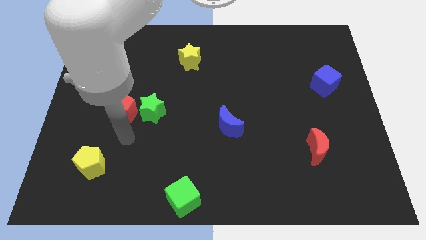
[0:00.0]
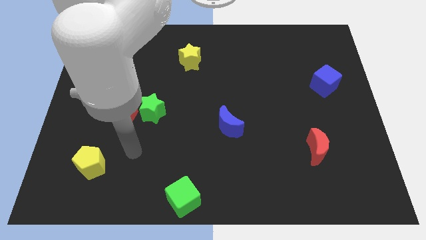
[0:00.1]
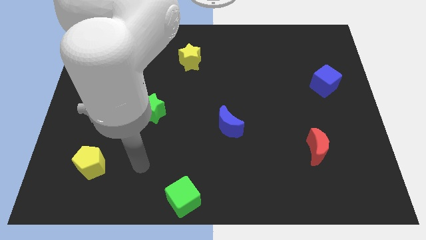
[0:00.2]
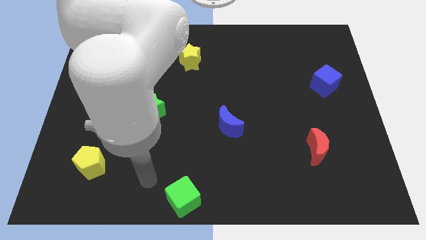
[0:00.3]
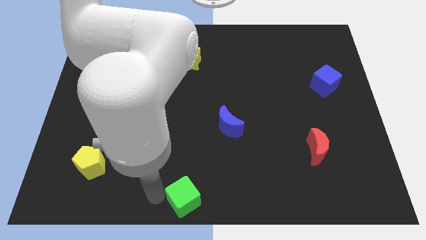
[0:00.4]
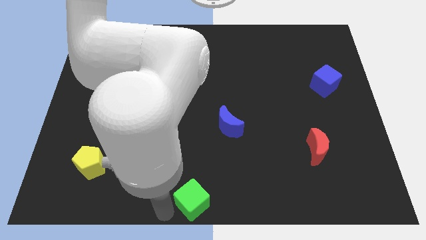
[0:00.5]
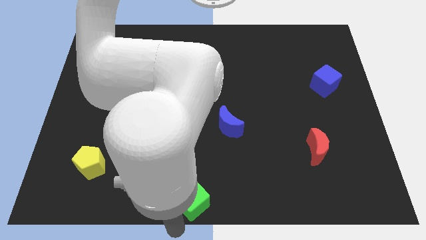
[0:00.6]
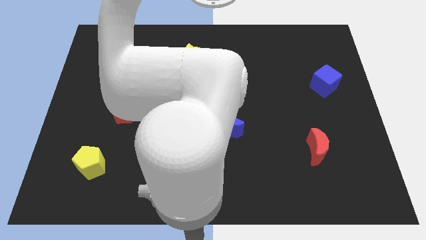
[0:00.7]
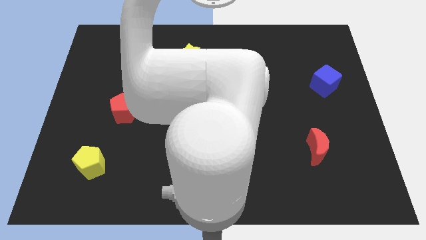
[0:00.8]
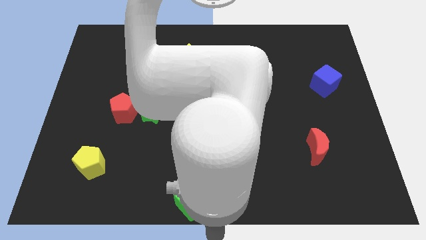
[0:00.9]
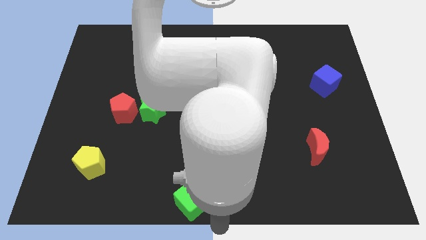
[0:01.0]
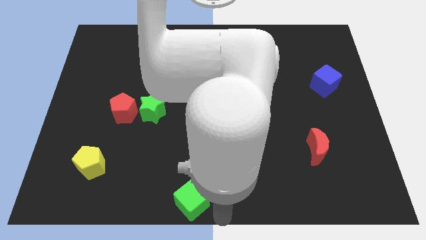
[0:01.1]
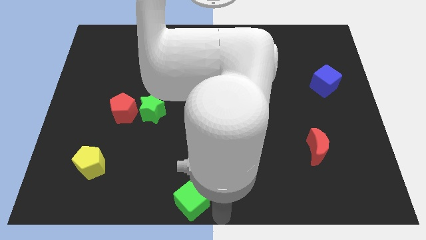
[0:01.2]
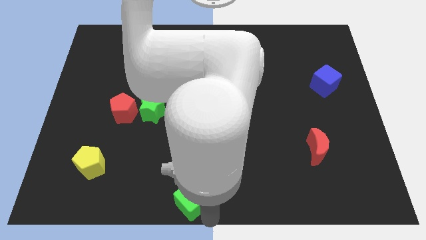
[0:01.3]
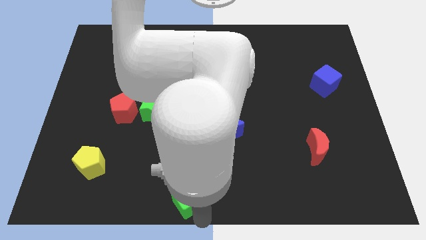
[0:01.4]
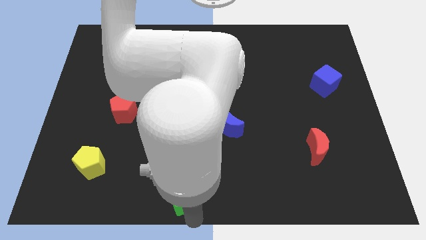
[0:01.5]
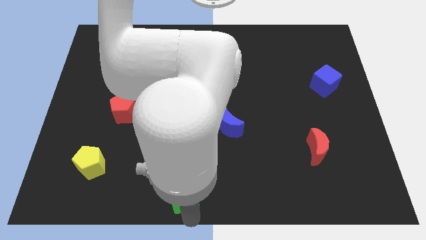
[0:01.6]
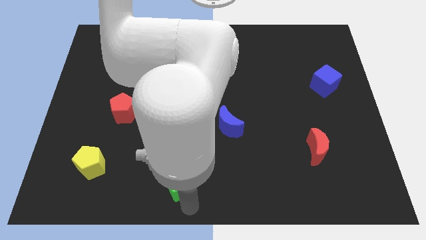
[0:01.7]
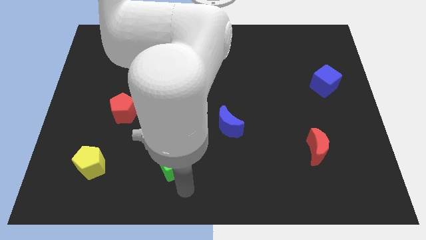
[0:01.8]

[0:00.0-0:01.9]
move the green cube parallel right to the yellow pentagon

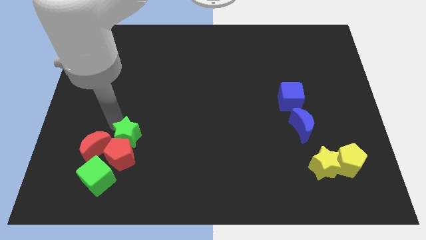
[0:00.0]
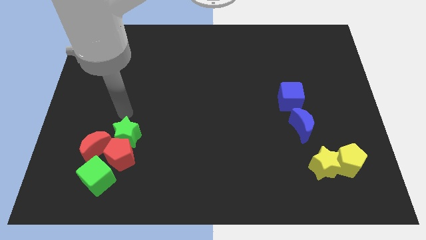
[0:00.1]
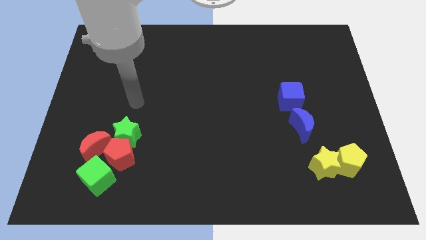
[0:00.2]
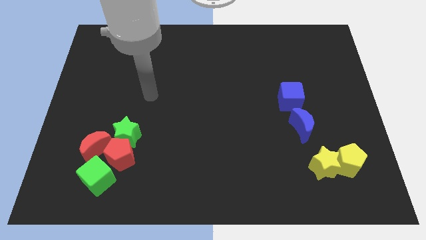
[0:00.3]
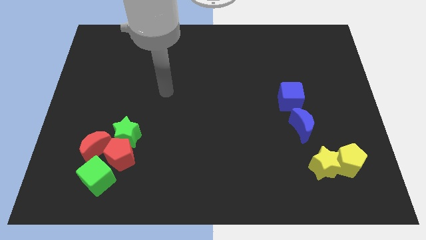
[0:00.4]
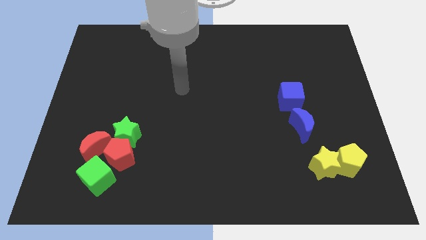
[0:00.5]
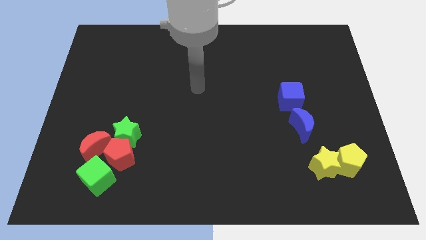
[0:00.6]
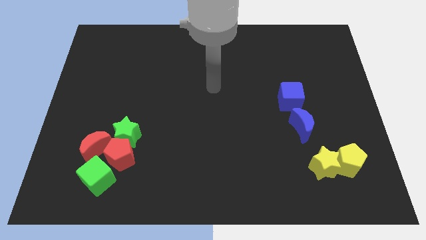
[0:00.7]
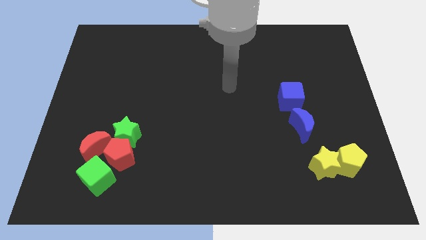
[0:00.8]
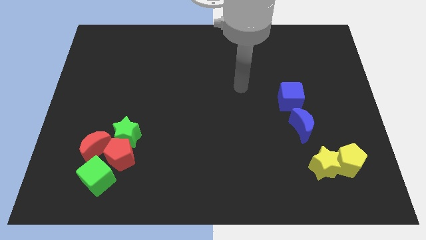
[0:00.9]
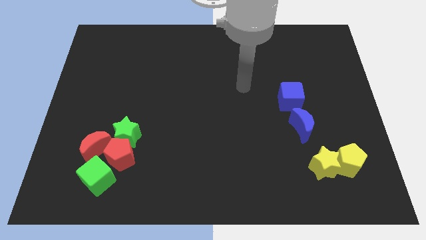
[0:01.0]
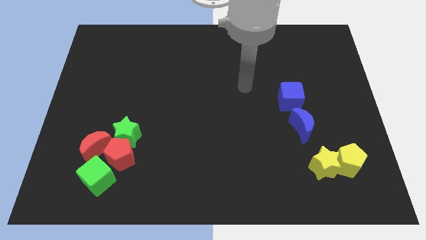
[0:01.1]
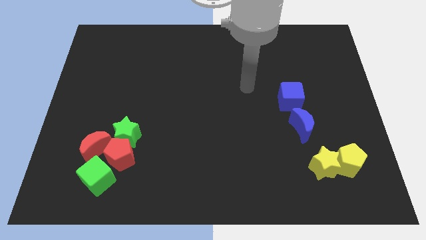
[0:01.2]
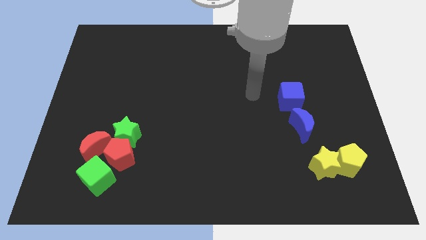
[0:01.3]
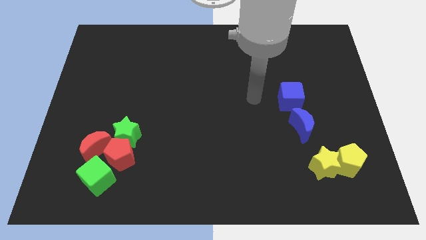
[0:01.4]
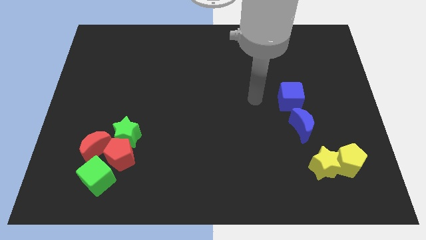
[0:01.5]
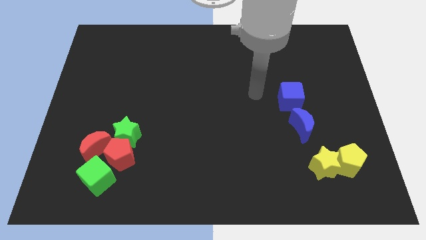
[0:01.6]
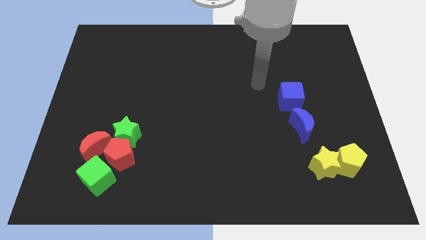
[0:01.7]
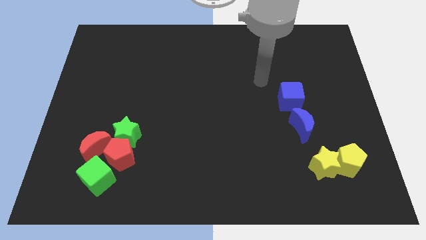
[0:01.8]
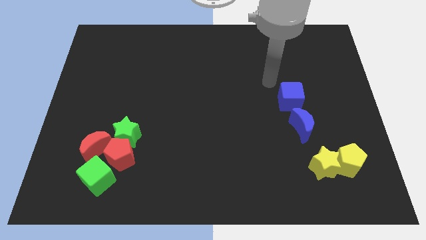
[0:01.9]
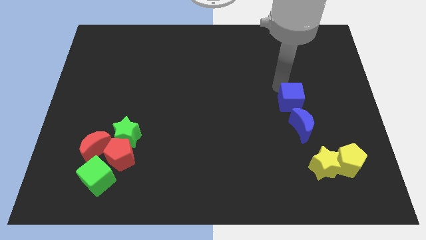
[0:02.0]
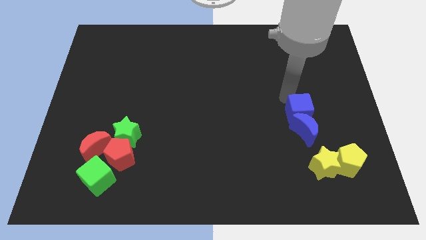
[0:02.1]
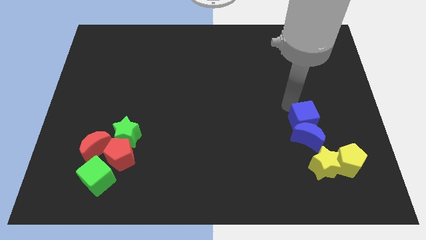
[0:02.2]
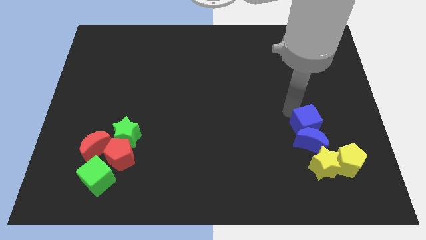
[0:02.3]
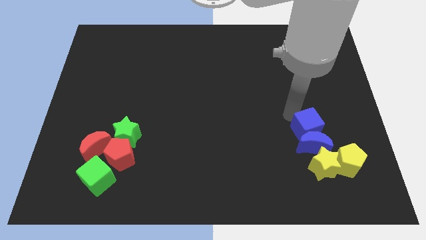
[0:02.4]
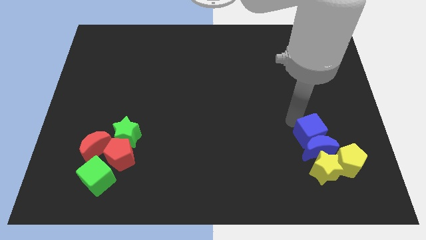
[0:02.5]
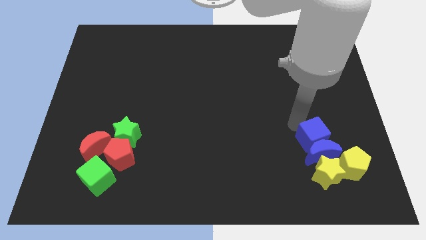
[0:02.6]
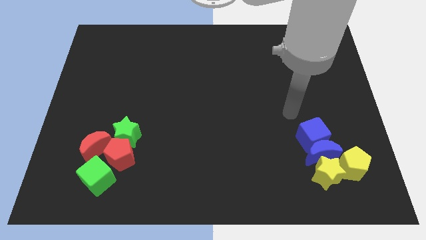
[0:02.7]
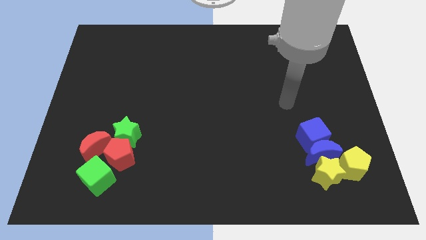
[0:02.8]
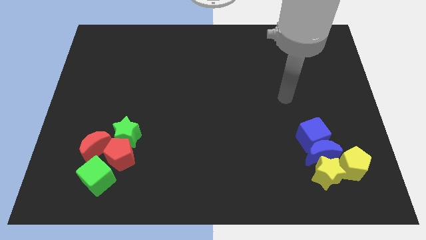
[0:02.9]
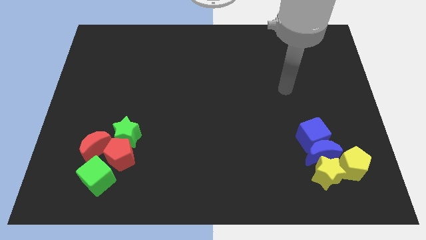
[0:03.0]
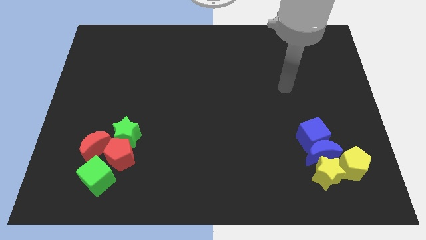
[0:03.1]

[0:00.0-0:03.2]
push the blue crescent with blue cube into the yellow star

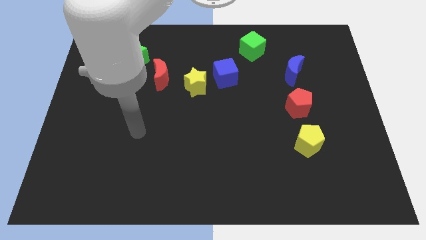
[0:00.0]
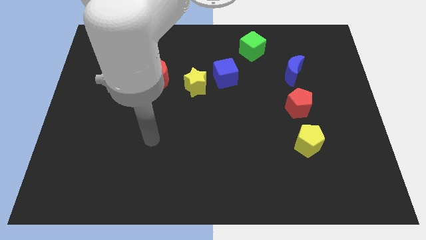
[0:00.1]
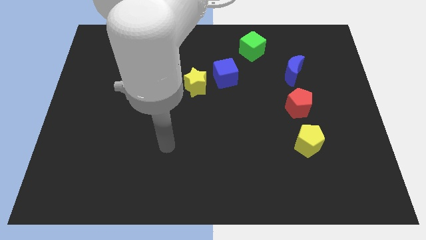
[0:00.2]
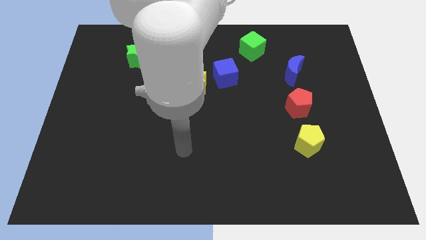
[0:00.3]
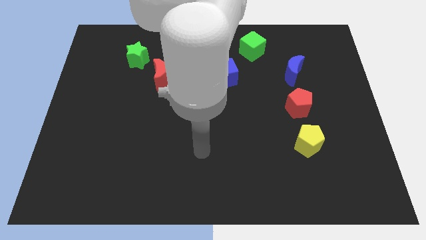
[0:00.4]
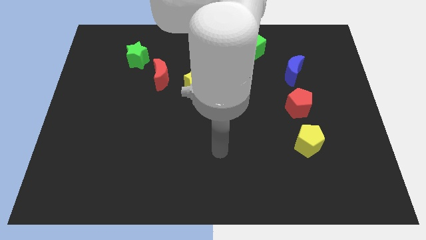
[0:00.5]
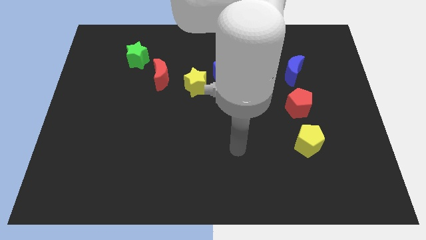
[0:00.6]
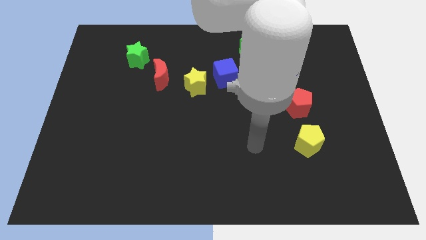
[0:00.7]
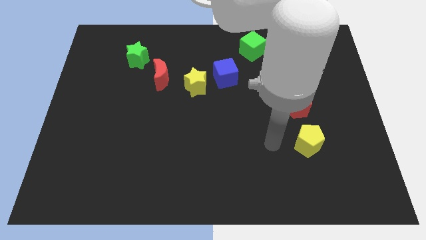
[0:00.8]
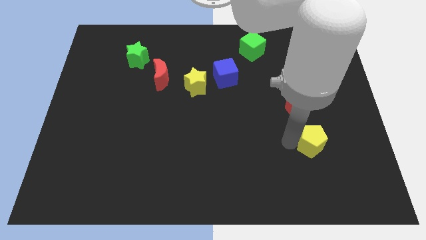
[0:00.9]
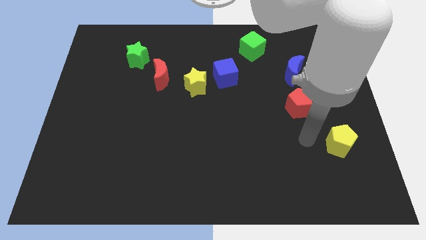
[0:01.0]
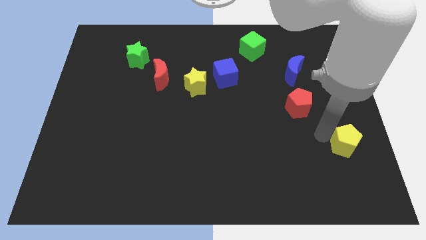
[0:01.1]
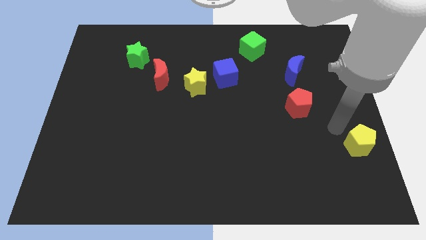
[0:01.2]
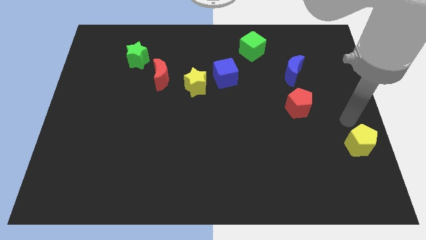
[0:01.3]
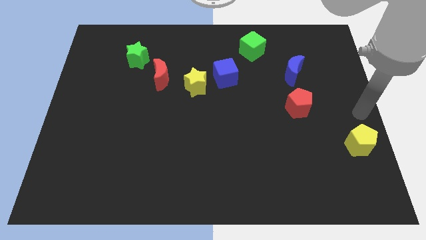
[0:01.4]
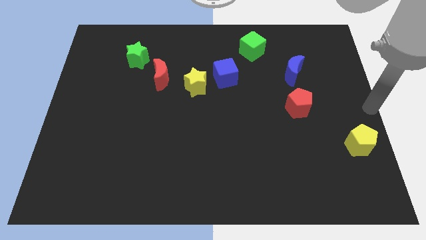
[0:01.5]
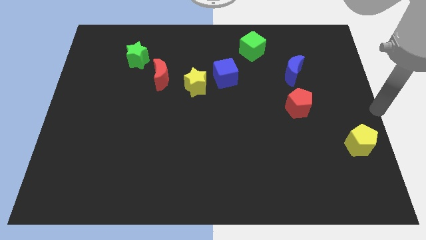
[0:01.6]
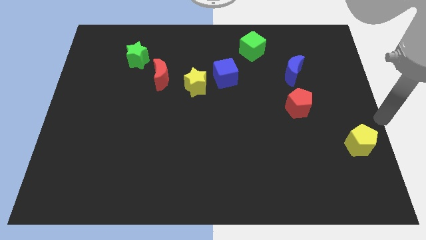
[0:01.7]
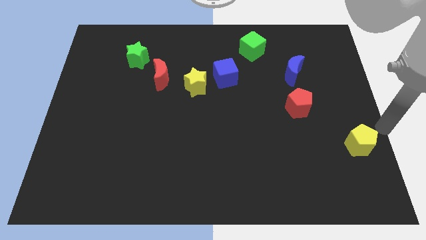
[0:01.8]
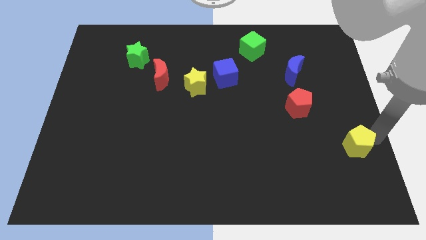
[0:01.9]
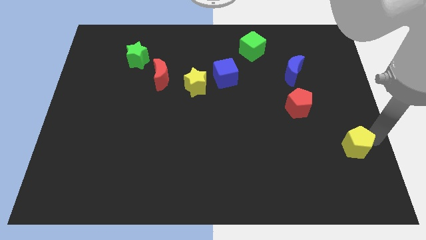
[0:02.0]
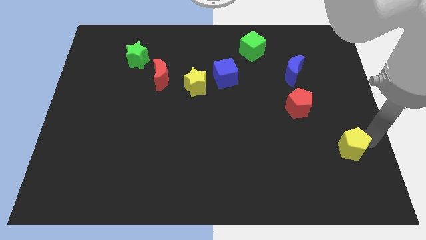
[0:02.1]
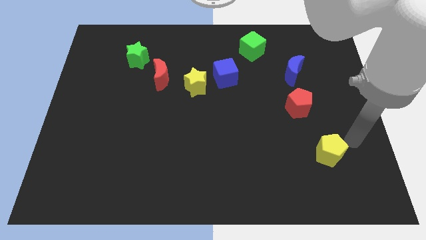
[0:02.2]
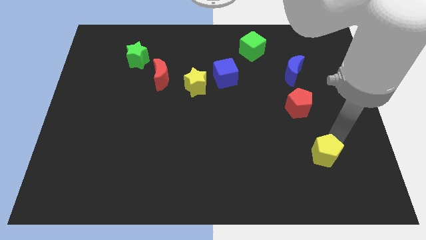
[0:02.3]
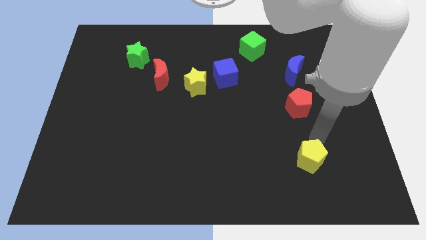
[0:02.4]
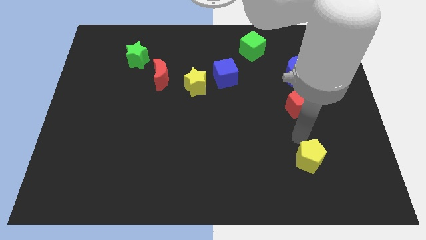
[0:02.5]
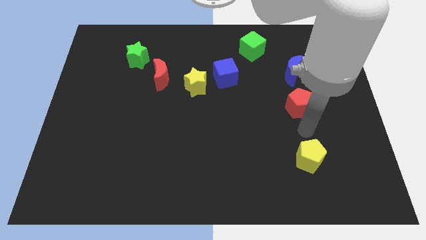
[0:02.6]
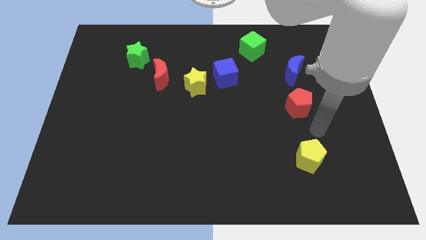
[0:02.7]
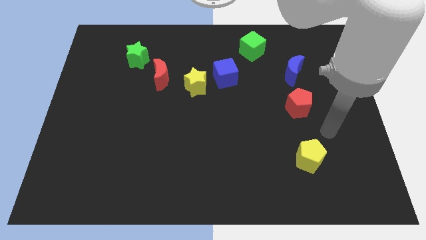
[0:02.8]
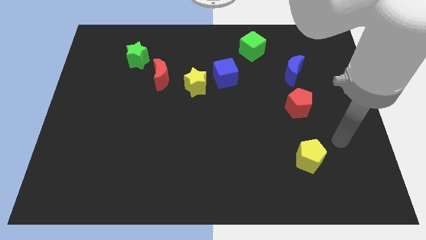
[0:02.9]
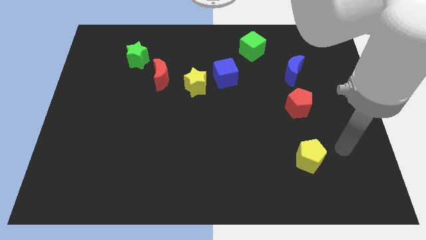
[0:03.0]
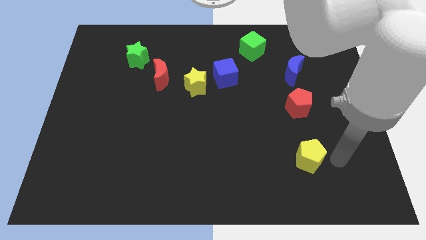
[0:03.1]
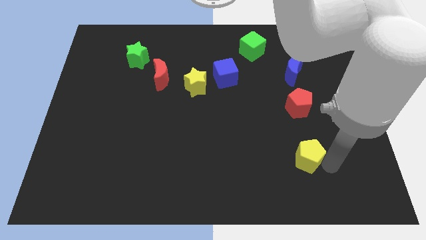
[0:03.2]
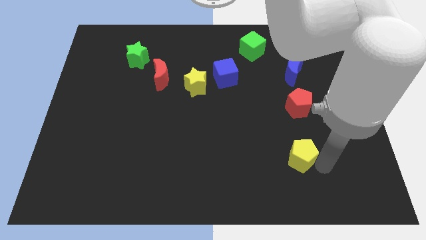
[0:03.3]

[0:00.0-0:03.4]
place the yellow pentagon vertically below the red pentagon

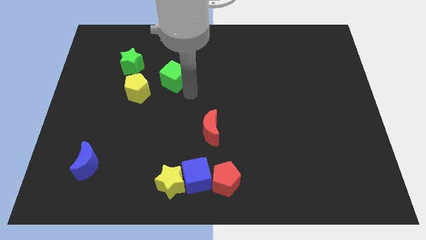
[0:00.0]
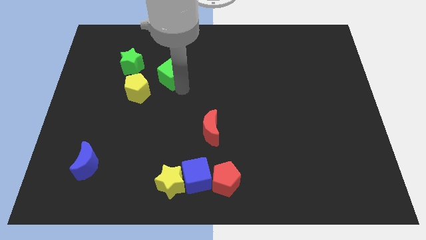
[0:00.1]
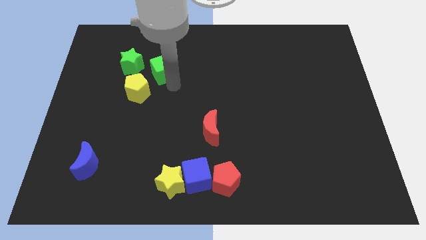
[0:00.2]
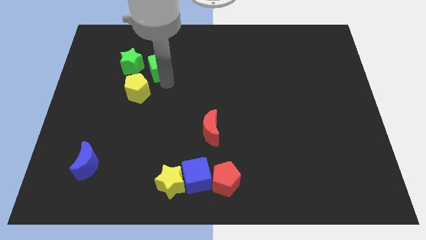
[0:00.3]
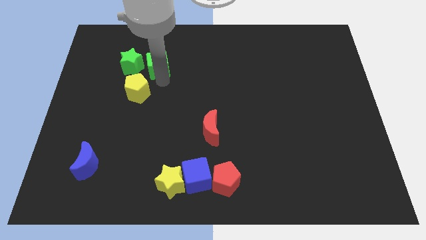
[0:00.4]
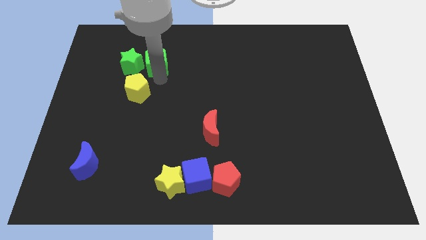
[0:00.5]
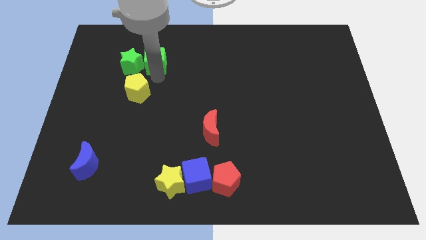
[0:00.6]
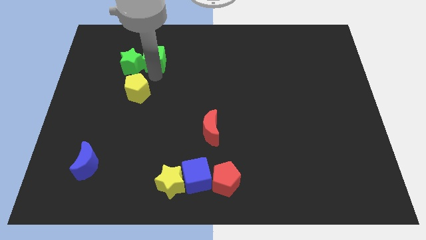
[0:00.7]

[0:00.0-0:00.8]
place the green cube close to the green star
